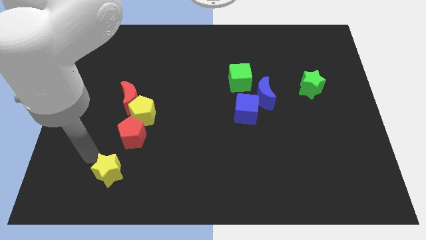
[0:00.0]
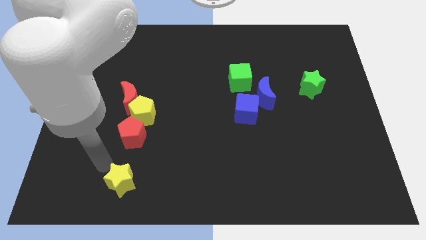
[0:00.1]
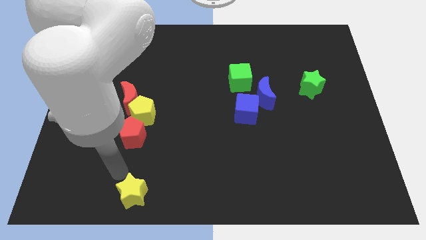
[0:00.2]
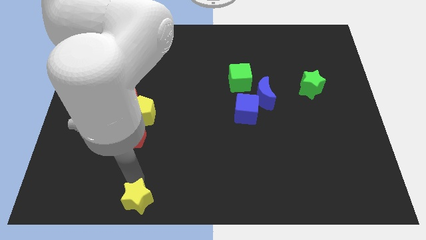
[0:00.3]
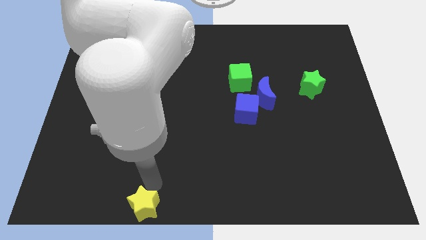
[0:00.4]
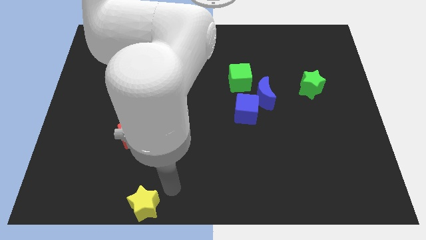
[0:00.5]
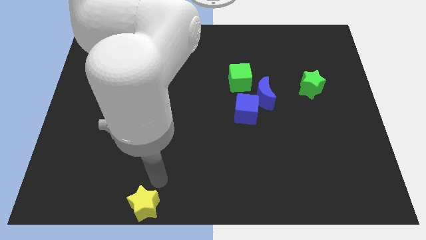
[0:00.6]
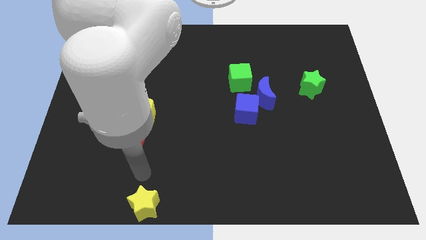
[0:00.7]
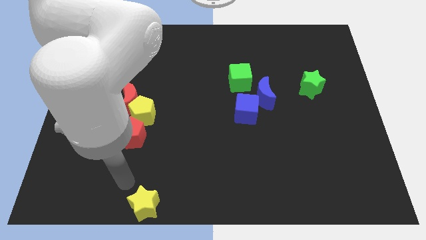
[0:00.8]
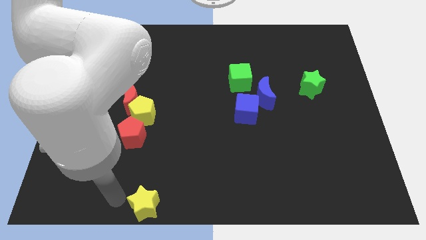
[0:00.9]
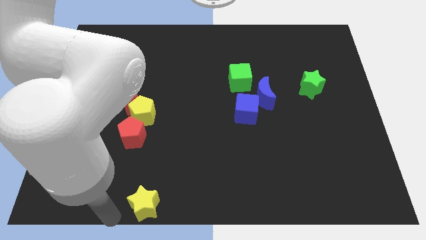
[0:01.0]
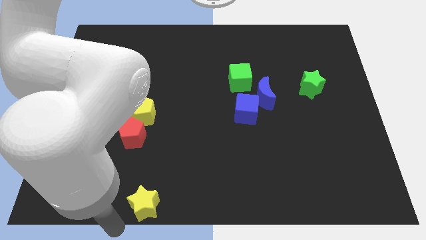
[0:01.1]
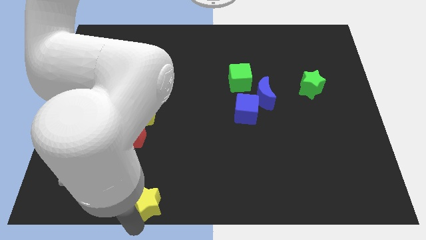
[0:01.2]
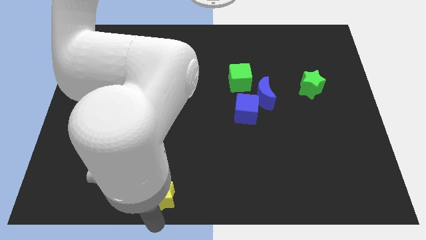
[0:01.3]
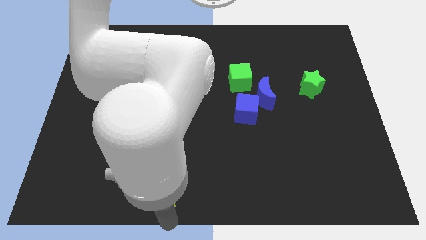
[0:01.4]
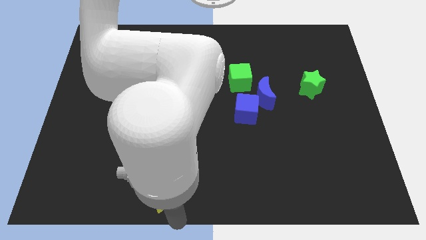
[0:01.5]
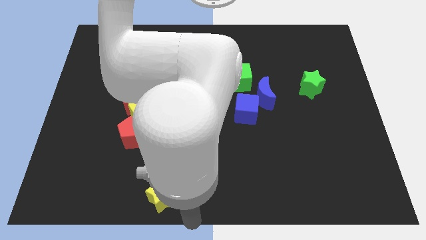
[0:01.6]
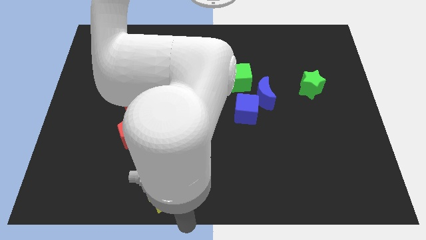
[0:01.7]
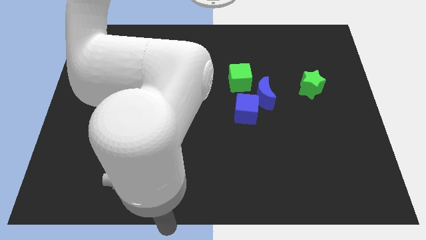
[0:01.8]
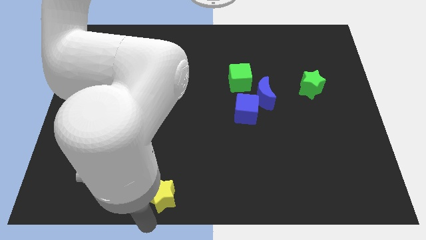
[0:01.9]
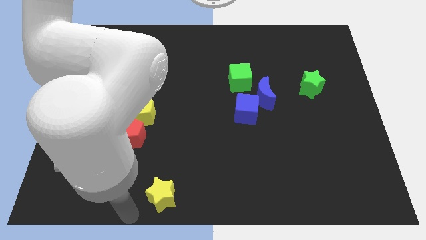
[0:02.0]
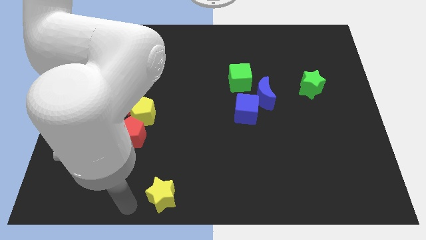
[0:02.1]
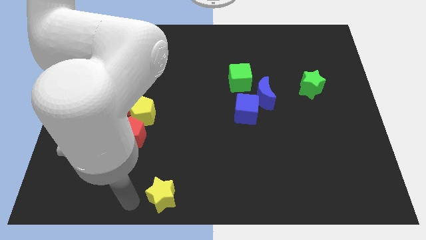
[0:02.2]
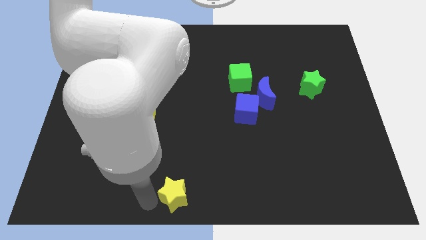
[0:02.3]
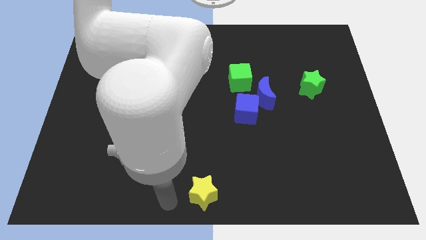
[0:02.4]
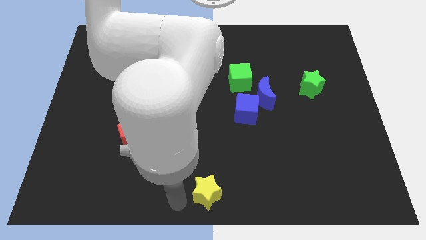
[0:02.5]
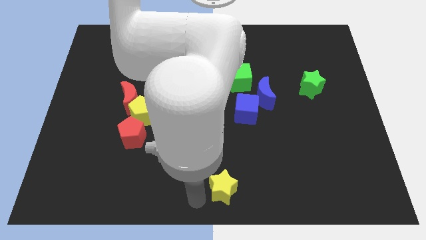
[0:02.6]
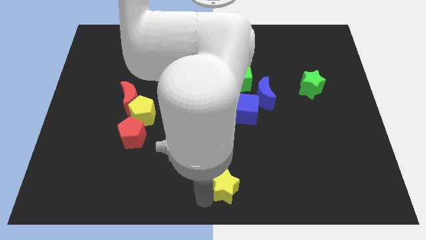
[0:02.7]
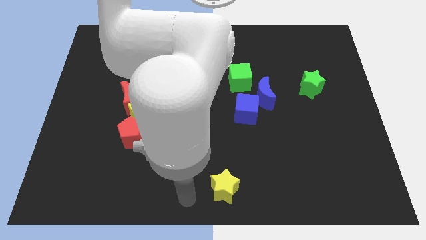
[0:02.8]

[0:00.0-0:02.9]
push the yellow star to the bottom enter of the board

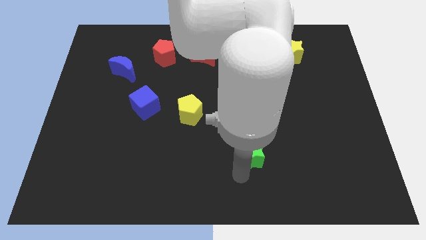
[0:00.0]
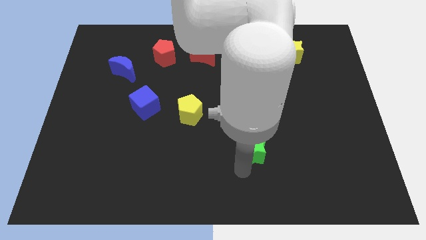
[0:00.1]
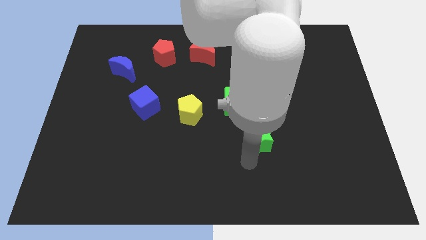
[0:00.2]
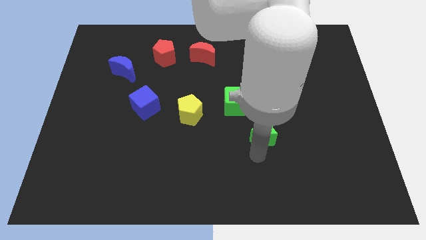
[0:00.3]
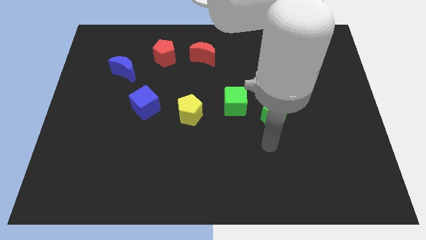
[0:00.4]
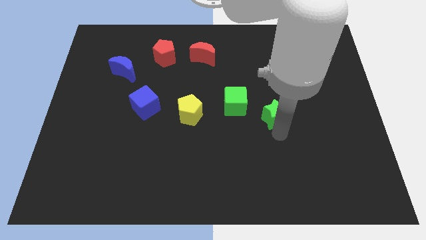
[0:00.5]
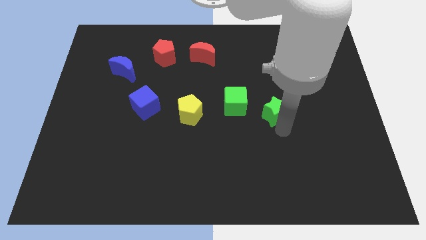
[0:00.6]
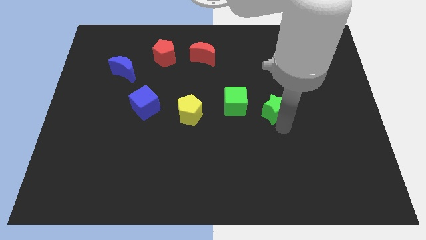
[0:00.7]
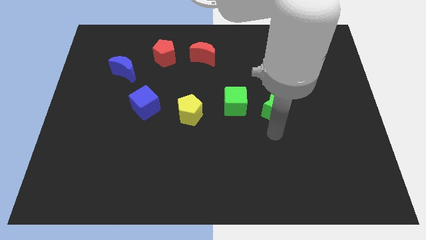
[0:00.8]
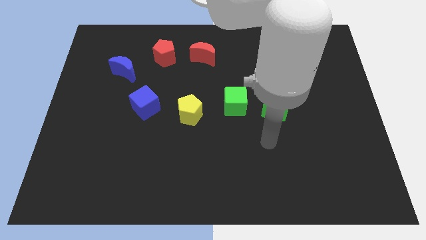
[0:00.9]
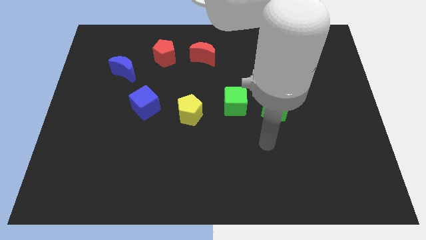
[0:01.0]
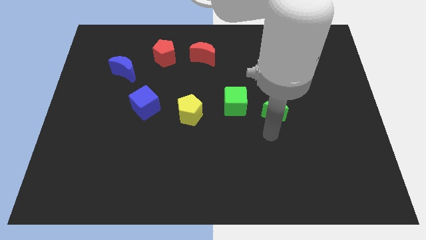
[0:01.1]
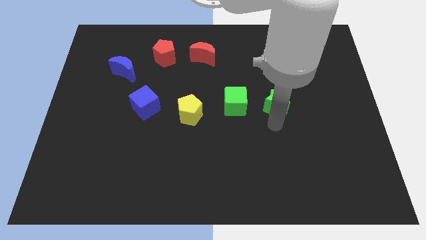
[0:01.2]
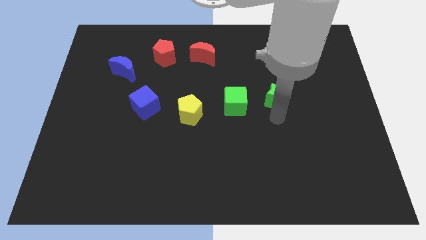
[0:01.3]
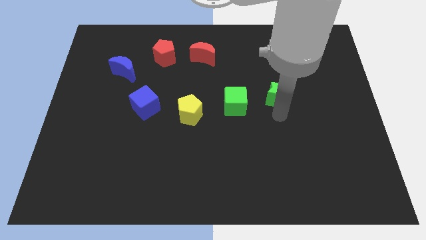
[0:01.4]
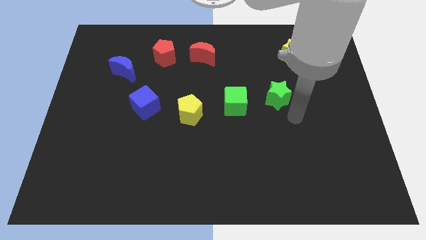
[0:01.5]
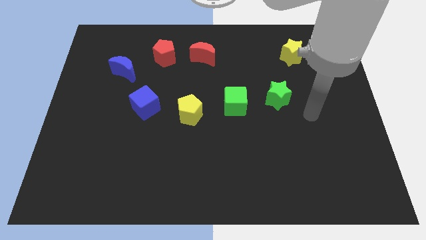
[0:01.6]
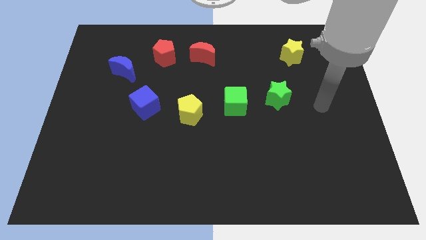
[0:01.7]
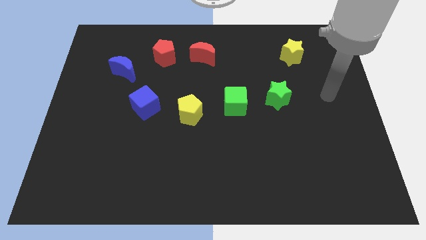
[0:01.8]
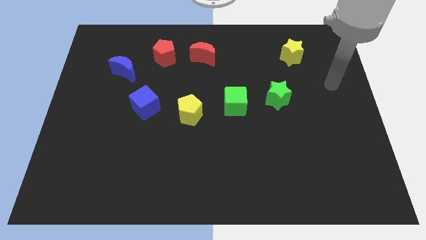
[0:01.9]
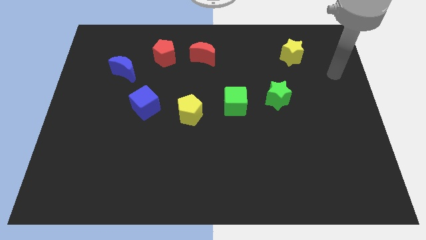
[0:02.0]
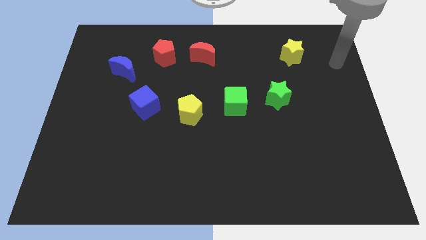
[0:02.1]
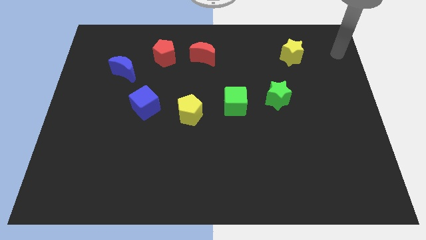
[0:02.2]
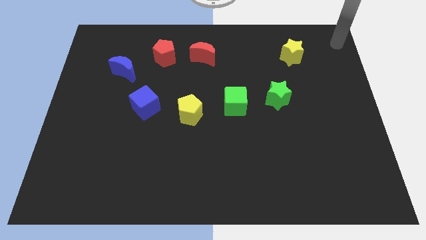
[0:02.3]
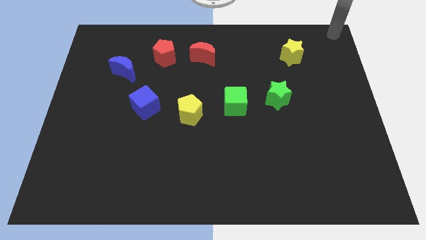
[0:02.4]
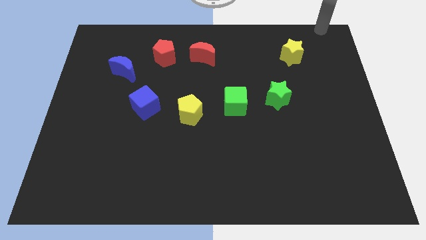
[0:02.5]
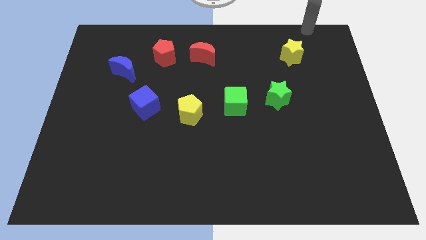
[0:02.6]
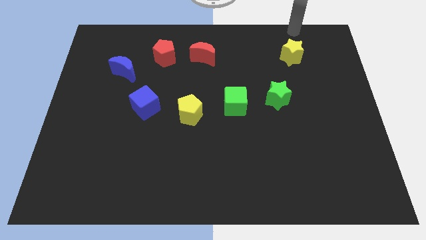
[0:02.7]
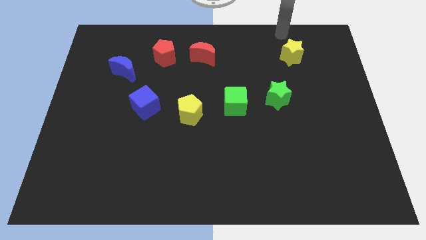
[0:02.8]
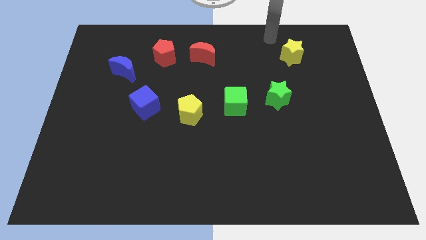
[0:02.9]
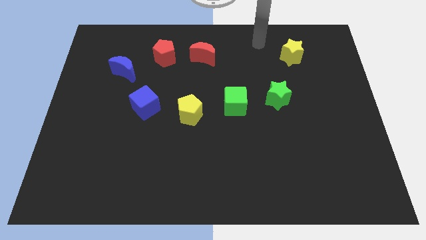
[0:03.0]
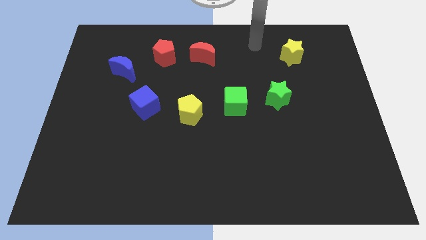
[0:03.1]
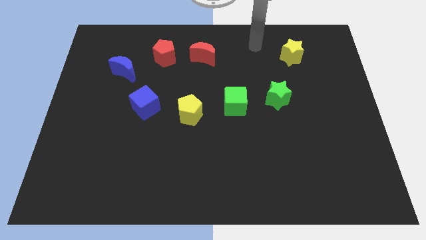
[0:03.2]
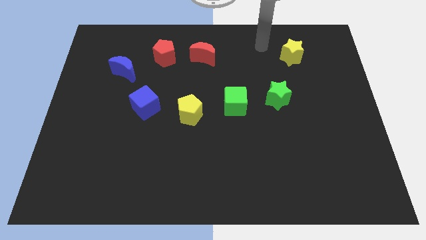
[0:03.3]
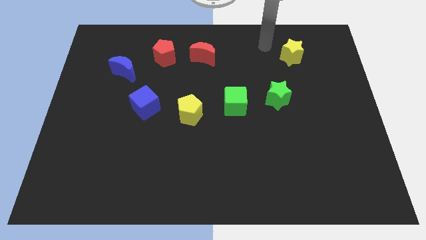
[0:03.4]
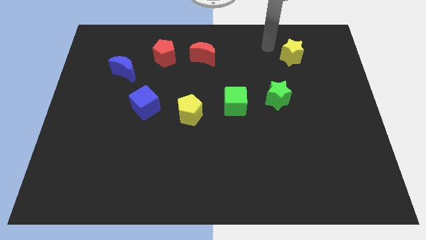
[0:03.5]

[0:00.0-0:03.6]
place your arm towards the top left of the yellow star

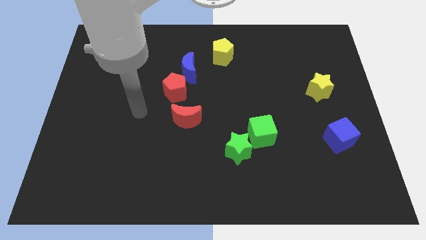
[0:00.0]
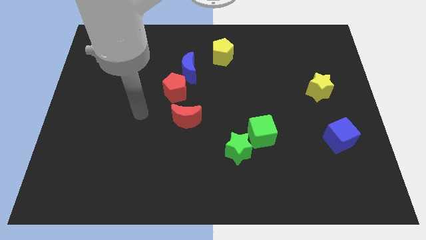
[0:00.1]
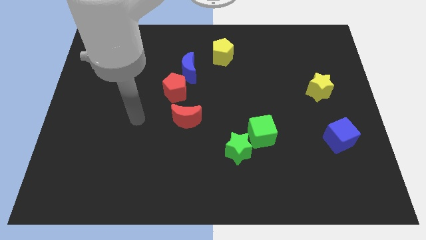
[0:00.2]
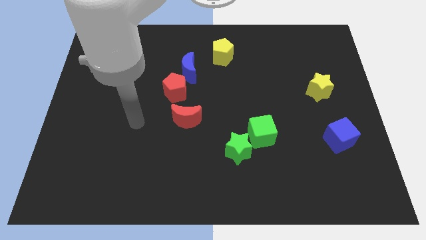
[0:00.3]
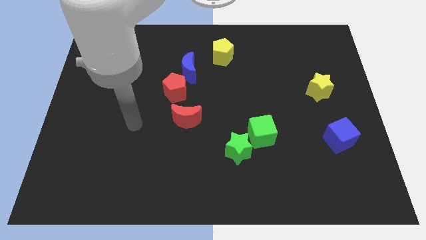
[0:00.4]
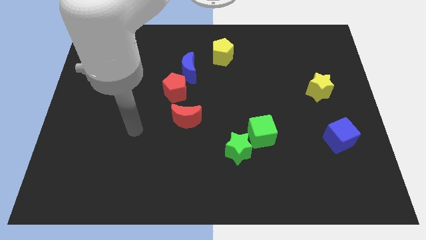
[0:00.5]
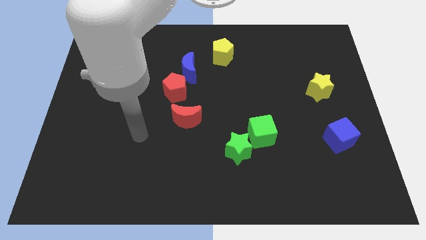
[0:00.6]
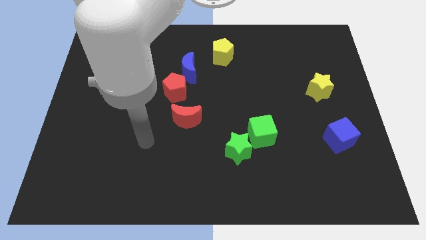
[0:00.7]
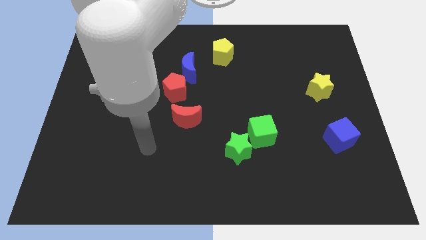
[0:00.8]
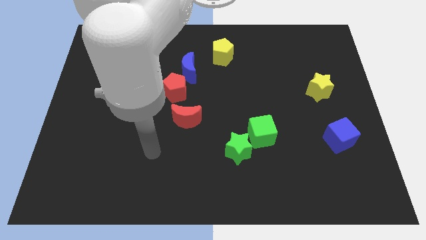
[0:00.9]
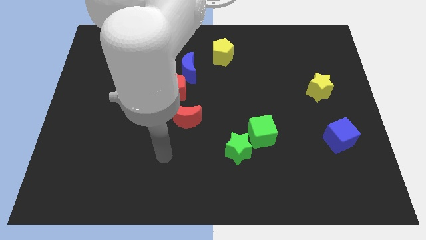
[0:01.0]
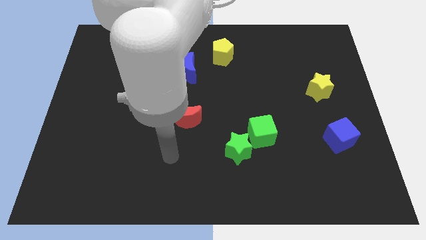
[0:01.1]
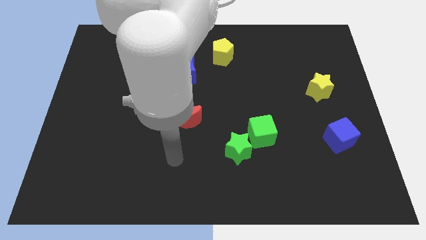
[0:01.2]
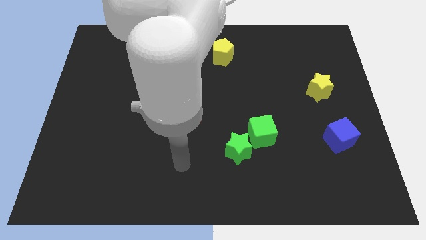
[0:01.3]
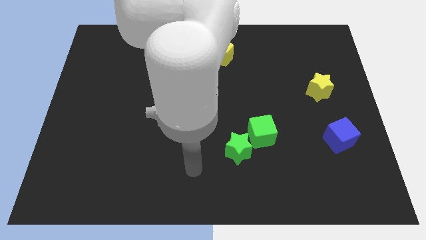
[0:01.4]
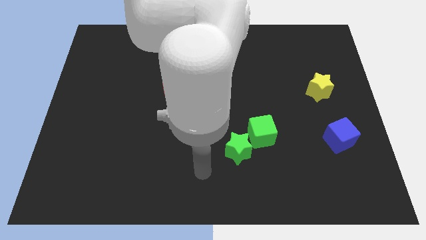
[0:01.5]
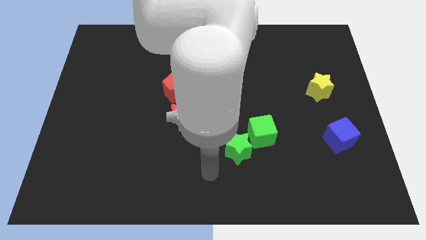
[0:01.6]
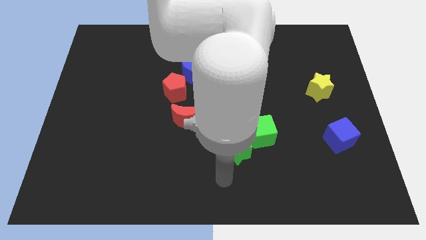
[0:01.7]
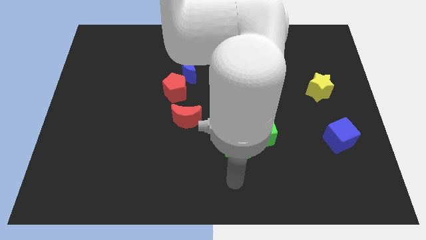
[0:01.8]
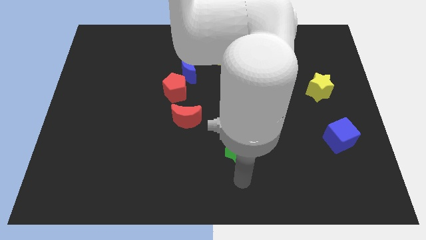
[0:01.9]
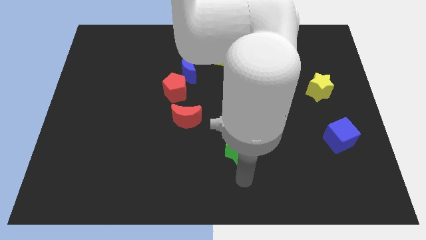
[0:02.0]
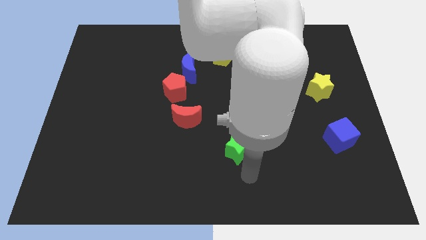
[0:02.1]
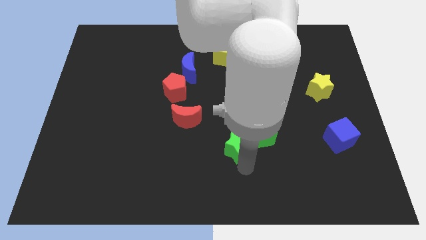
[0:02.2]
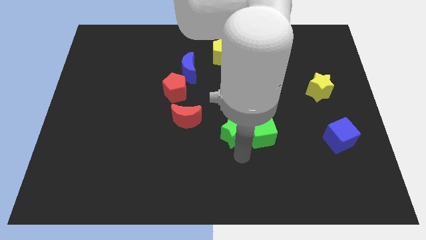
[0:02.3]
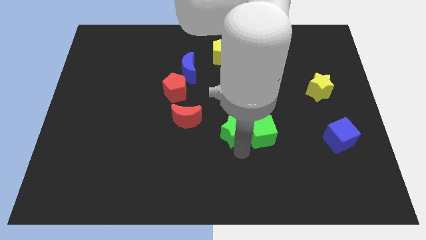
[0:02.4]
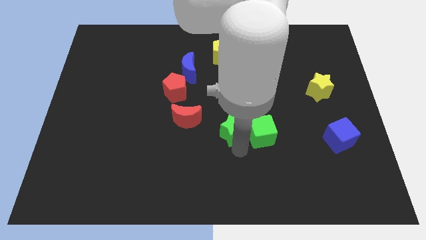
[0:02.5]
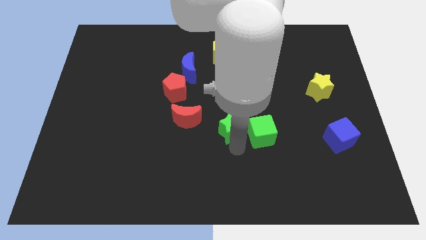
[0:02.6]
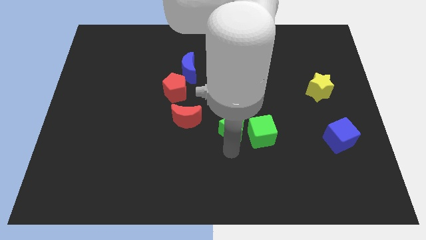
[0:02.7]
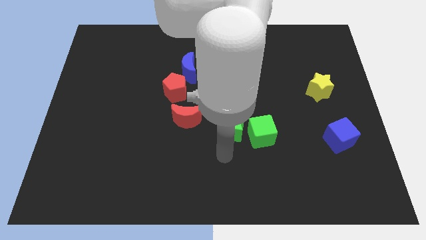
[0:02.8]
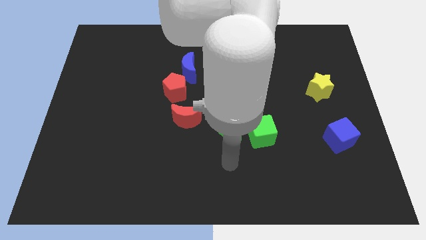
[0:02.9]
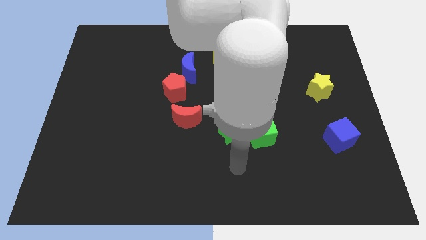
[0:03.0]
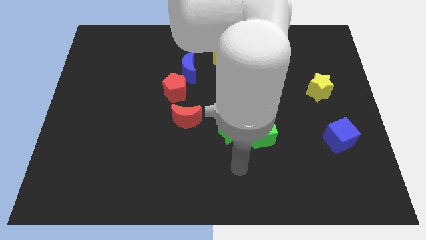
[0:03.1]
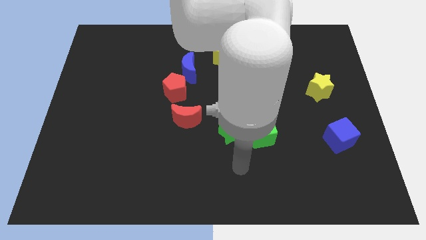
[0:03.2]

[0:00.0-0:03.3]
push the green star slightly up
